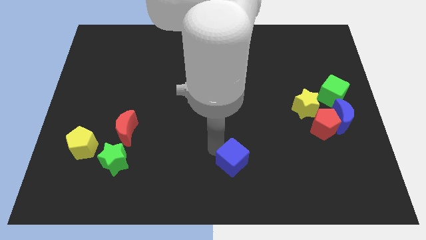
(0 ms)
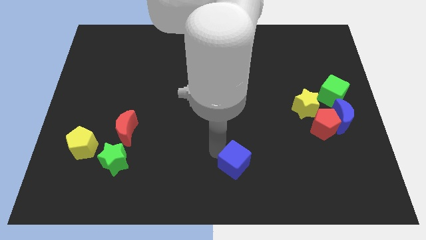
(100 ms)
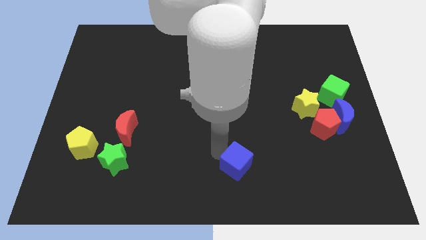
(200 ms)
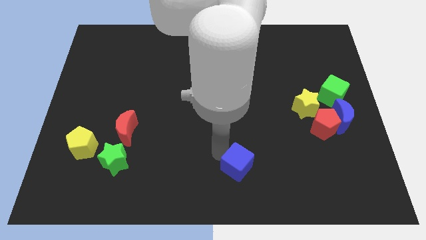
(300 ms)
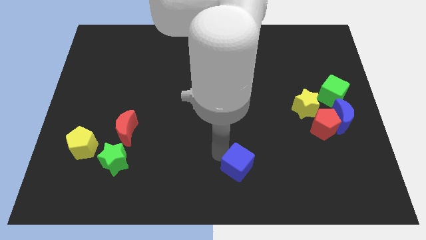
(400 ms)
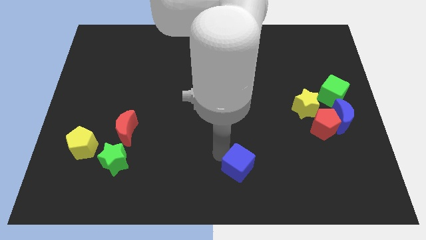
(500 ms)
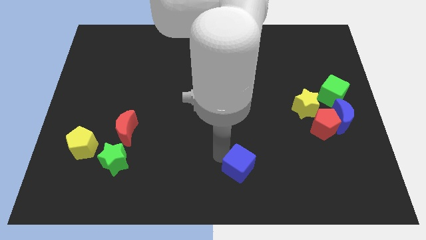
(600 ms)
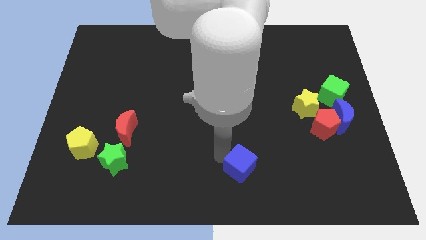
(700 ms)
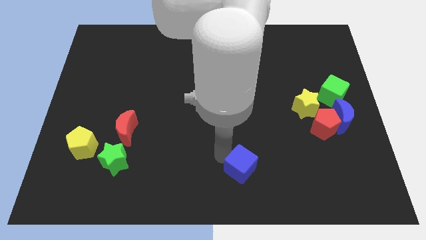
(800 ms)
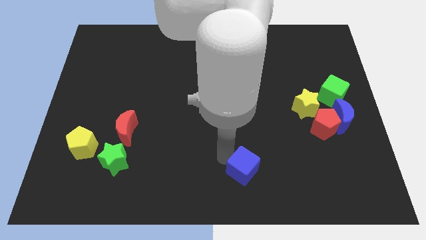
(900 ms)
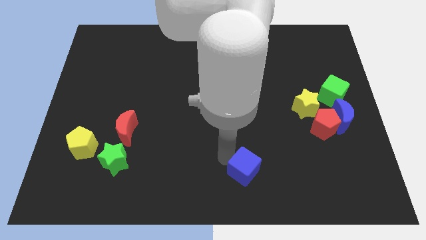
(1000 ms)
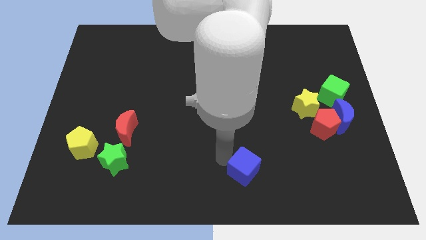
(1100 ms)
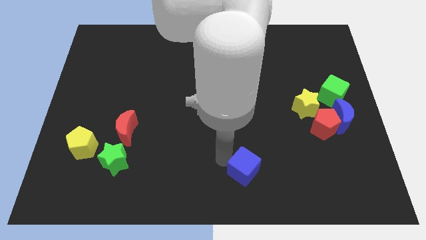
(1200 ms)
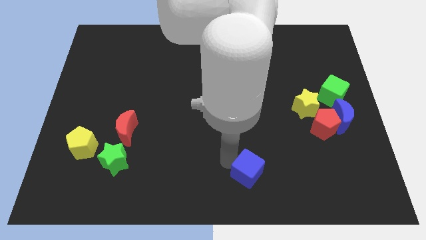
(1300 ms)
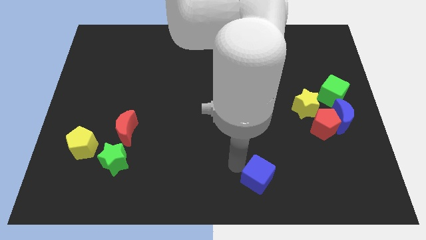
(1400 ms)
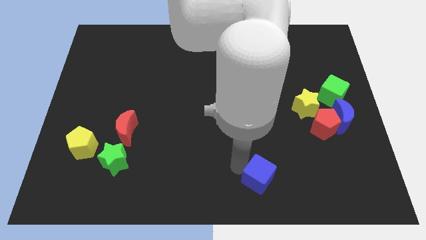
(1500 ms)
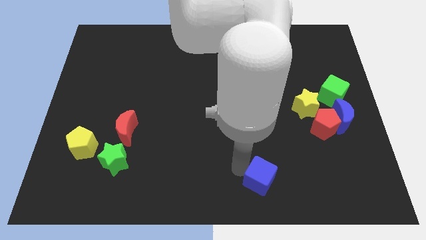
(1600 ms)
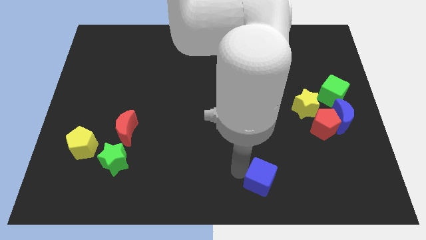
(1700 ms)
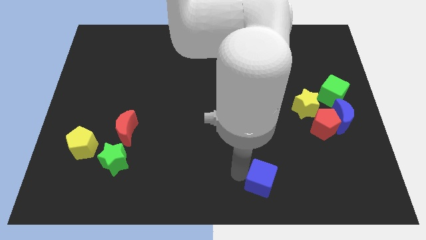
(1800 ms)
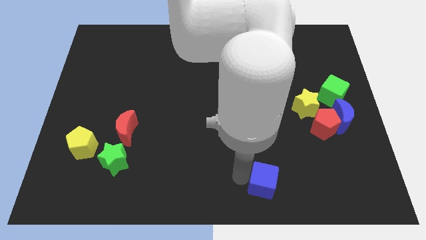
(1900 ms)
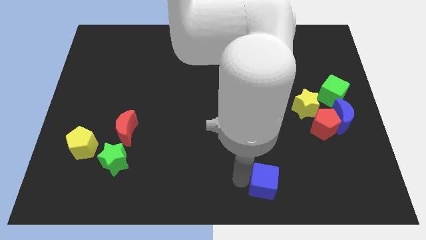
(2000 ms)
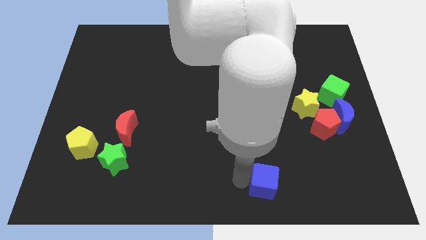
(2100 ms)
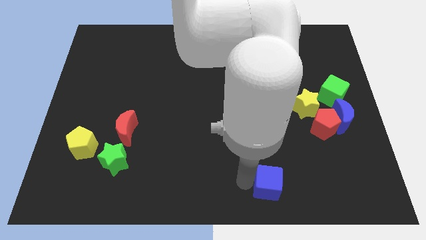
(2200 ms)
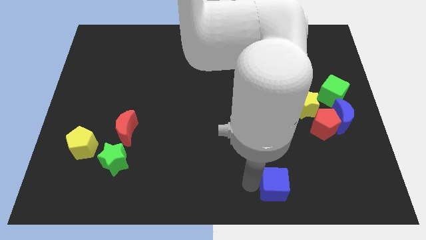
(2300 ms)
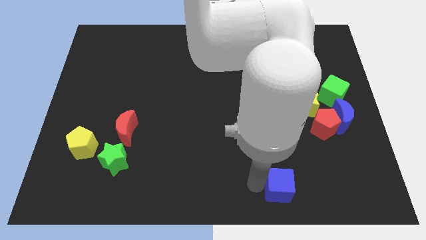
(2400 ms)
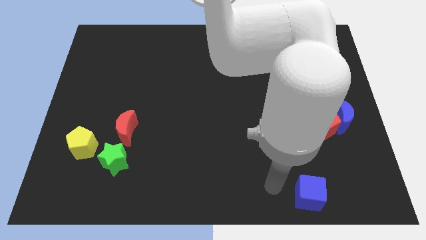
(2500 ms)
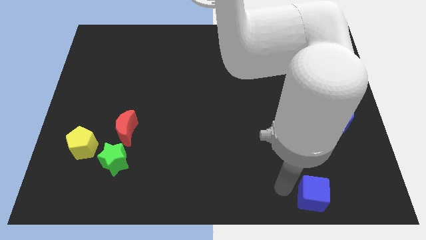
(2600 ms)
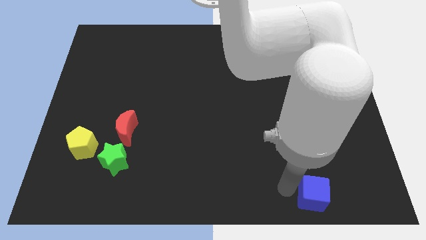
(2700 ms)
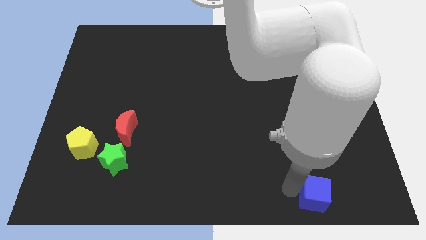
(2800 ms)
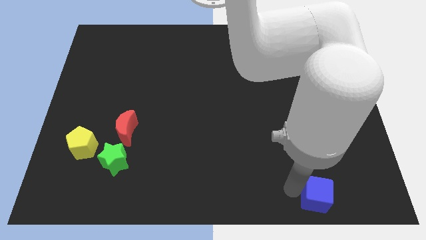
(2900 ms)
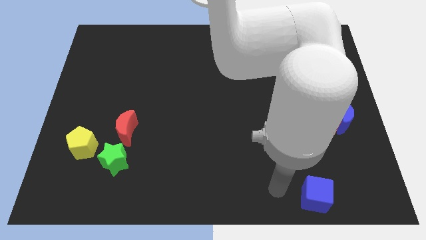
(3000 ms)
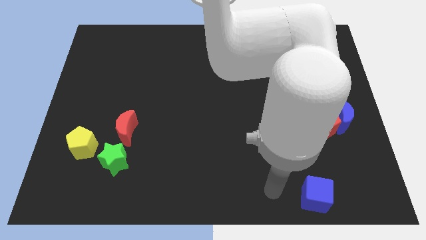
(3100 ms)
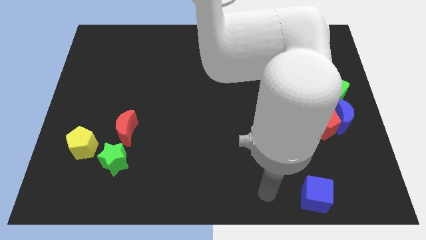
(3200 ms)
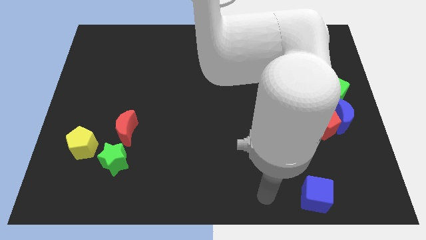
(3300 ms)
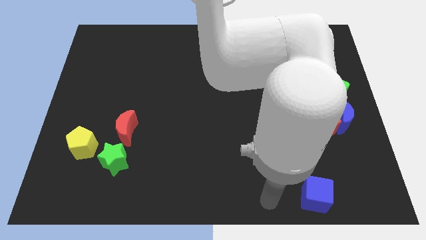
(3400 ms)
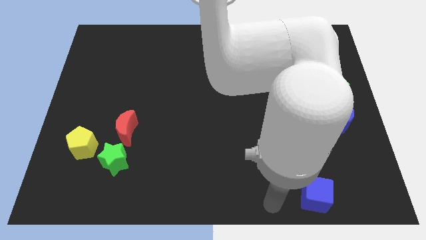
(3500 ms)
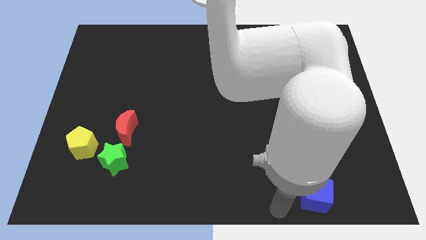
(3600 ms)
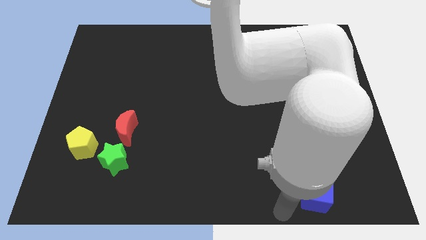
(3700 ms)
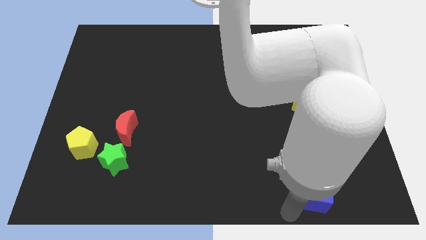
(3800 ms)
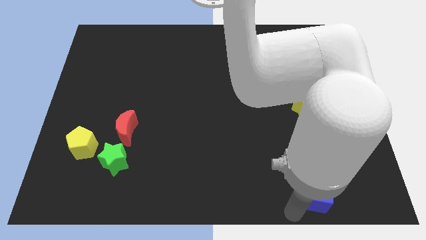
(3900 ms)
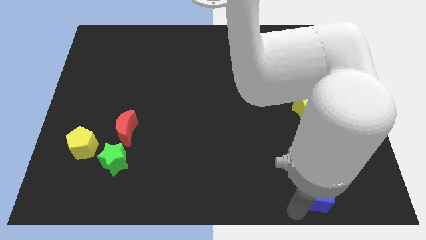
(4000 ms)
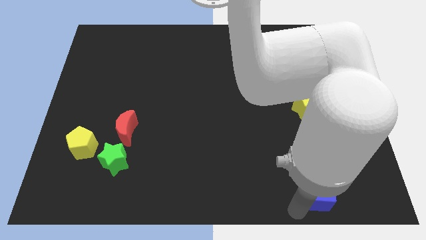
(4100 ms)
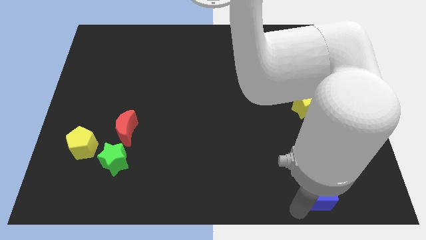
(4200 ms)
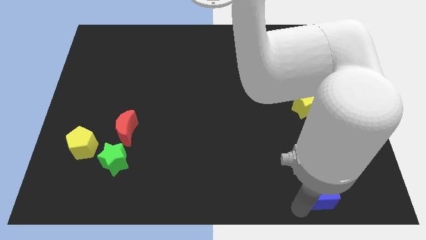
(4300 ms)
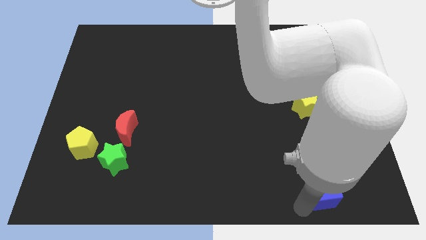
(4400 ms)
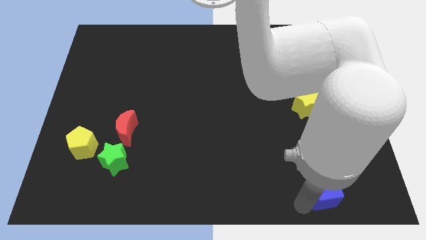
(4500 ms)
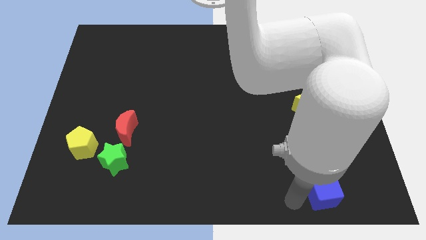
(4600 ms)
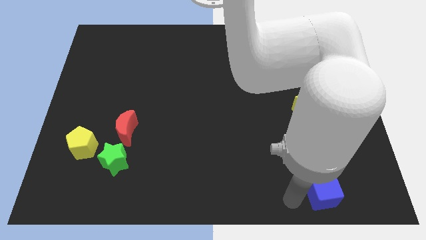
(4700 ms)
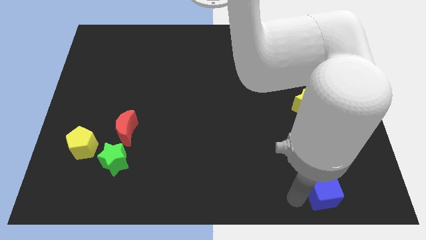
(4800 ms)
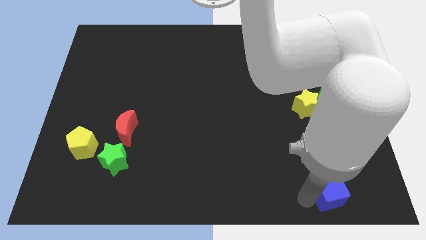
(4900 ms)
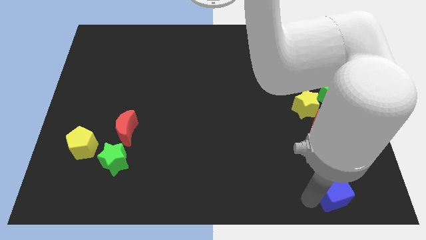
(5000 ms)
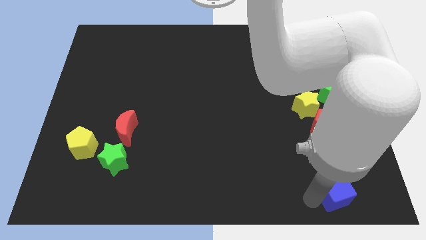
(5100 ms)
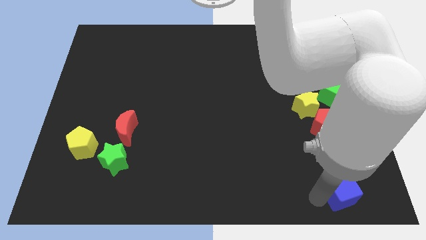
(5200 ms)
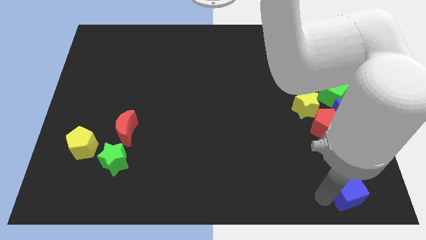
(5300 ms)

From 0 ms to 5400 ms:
push the blue cube towards the bottom right side of the board

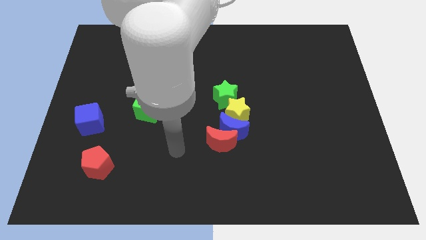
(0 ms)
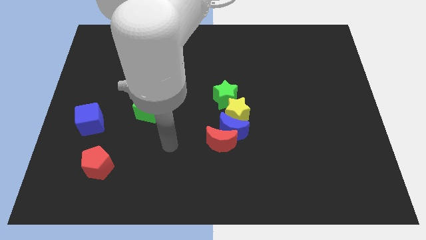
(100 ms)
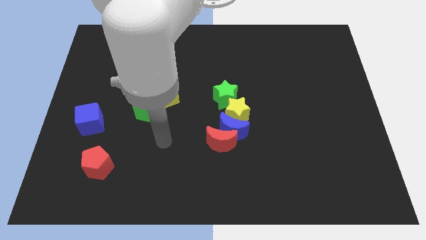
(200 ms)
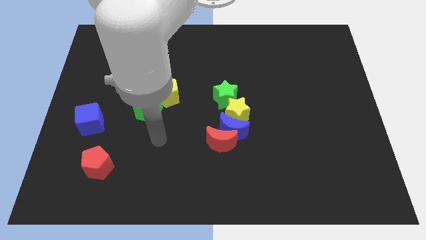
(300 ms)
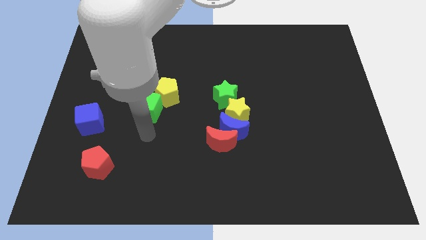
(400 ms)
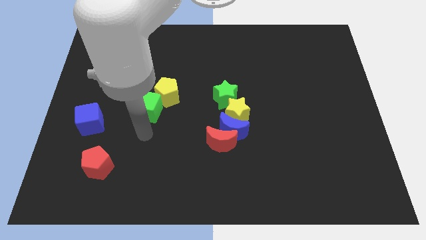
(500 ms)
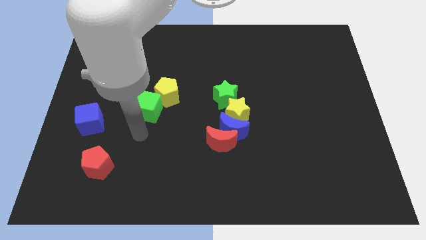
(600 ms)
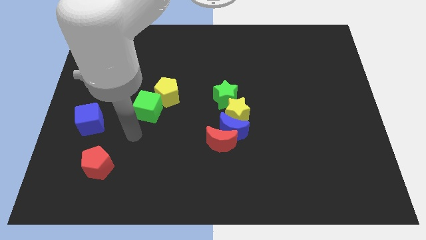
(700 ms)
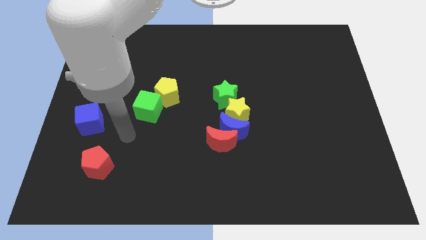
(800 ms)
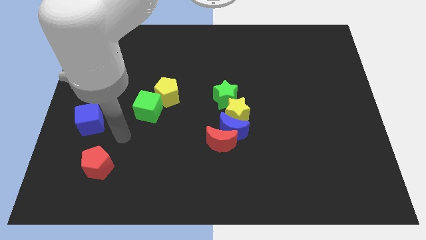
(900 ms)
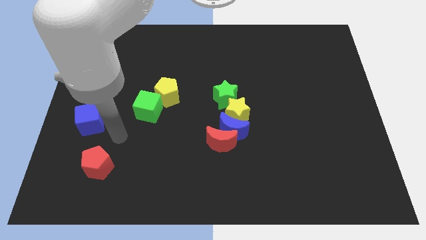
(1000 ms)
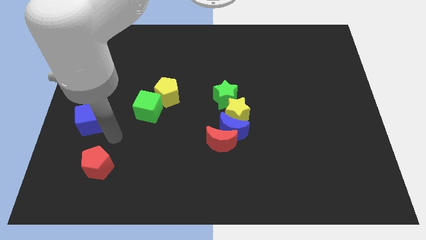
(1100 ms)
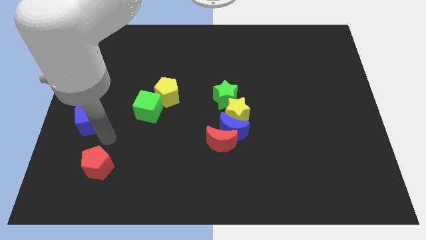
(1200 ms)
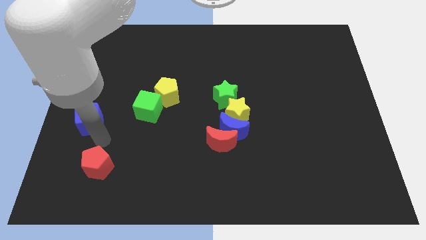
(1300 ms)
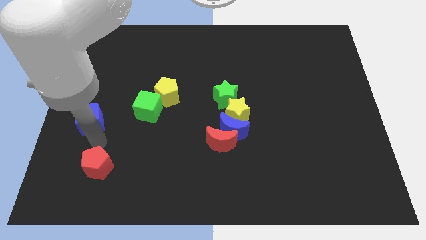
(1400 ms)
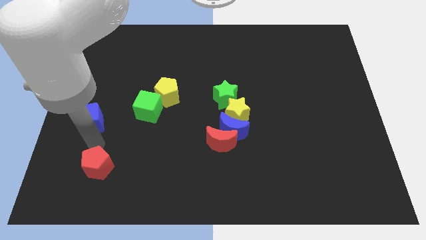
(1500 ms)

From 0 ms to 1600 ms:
point your arm at the top of the red pentagon

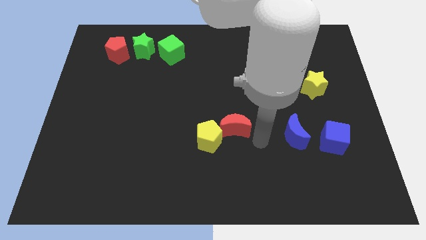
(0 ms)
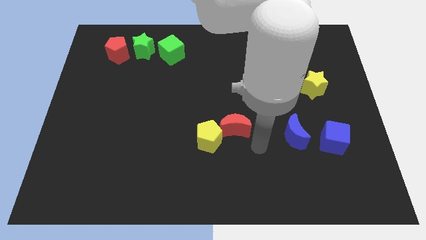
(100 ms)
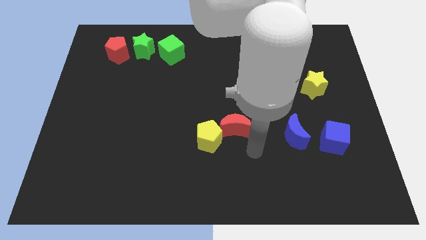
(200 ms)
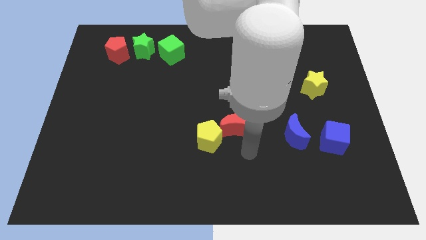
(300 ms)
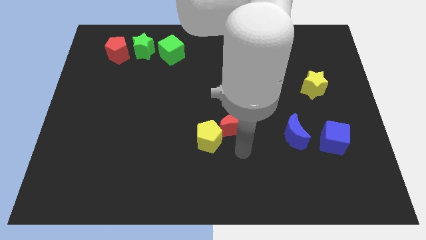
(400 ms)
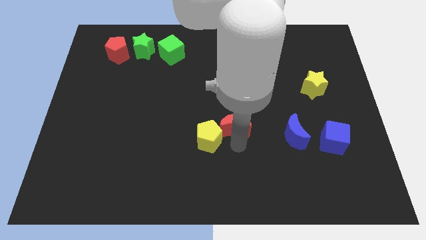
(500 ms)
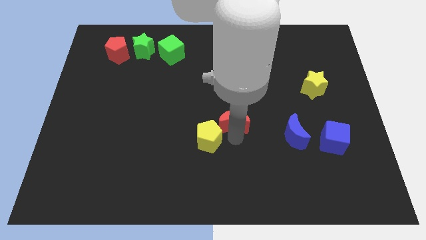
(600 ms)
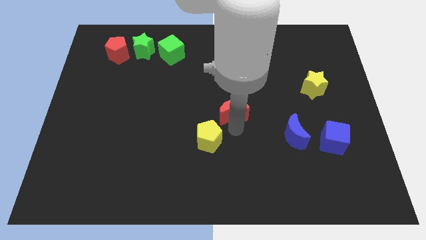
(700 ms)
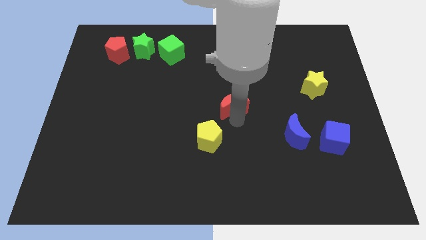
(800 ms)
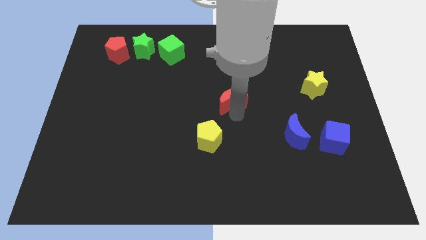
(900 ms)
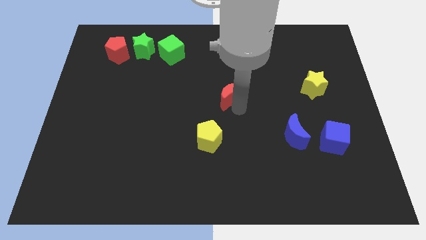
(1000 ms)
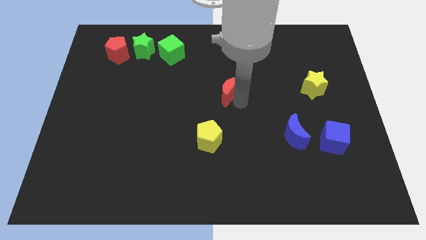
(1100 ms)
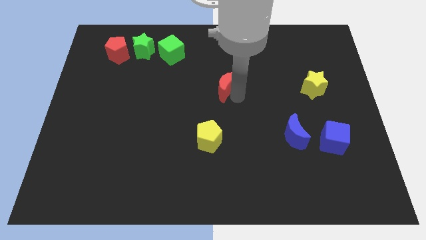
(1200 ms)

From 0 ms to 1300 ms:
separate the red moon from the yellow pentagon

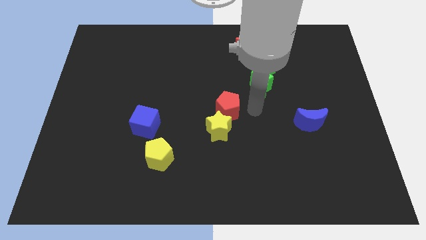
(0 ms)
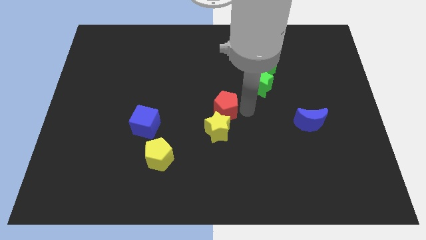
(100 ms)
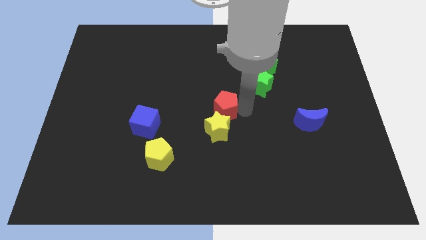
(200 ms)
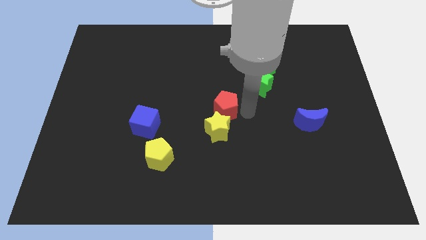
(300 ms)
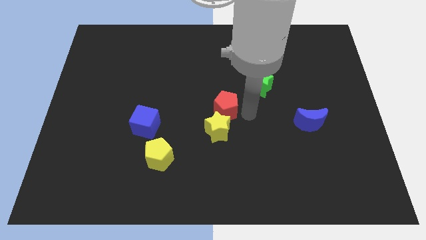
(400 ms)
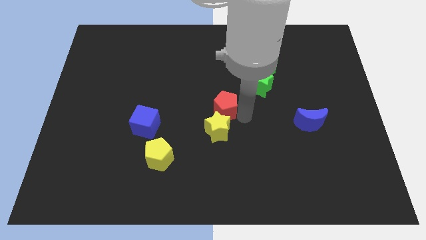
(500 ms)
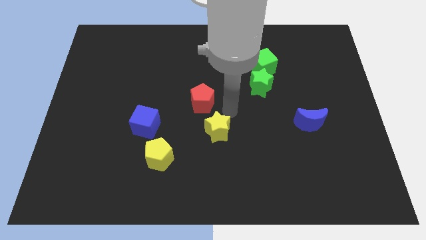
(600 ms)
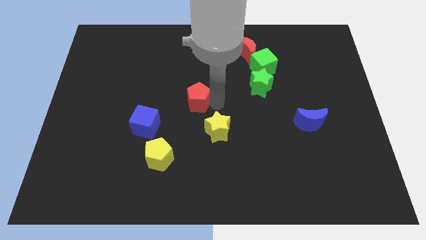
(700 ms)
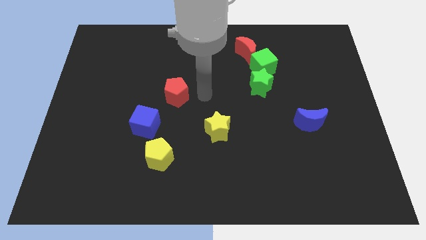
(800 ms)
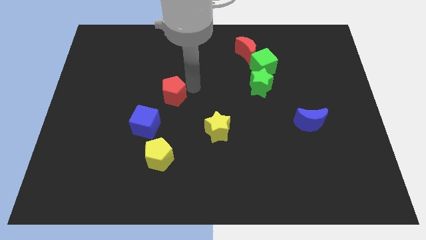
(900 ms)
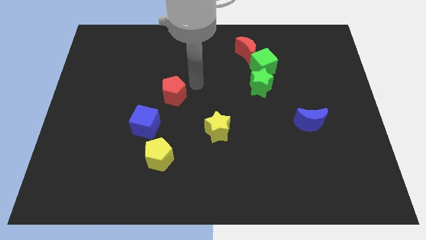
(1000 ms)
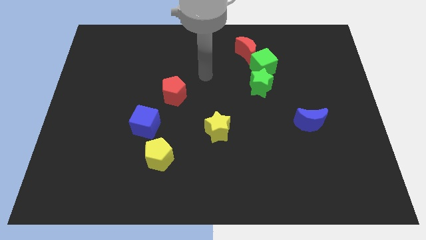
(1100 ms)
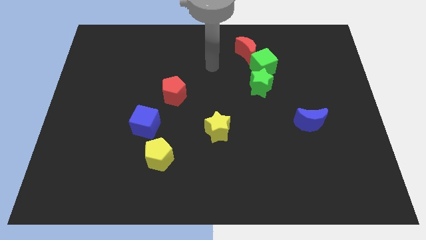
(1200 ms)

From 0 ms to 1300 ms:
push the red pentagon diagonally top right to the blue cube
